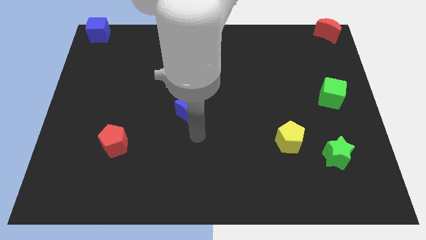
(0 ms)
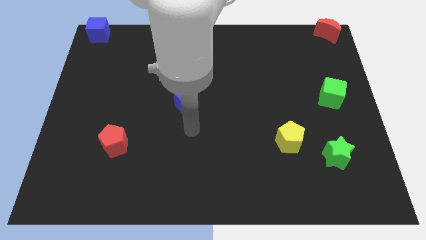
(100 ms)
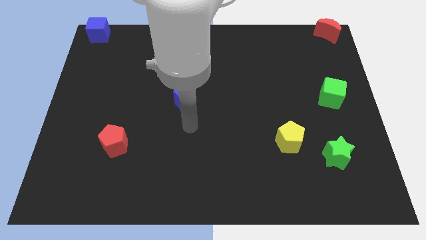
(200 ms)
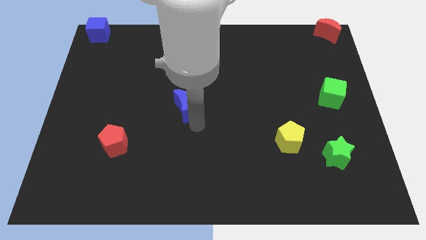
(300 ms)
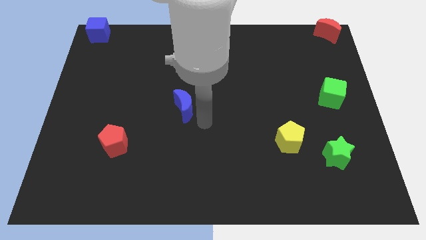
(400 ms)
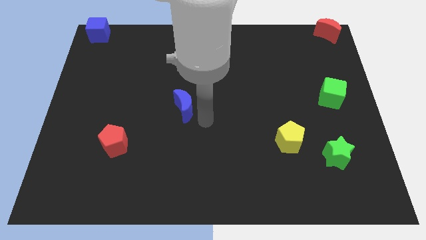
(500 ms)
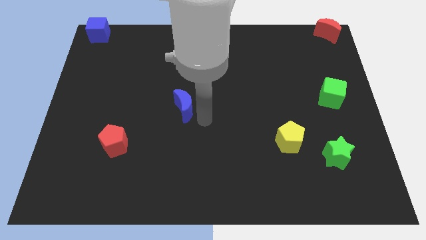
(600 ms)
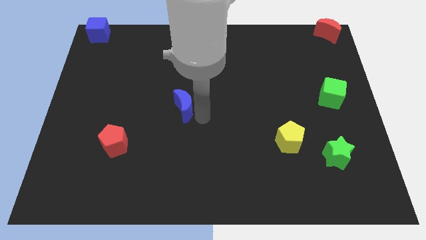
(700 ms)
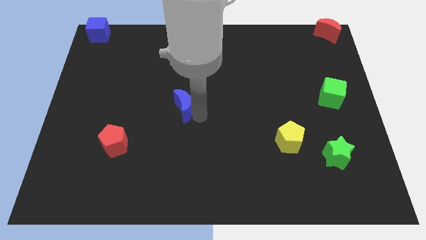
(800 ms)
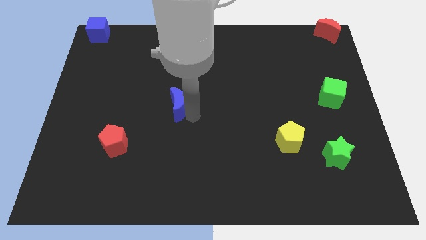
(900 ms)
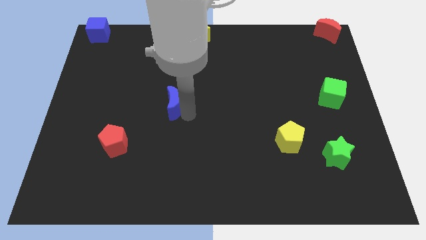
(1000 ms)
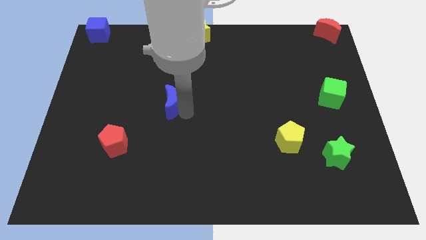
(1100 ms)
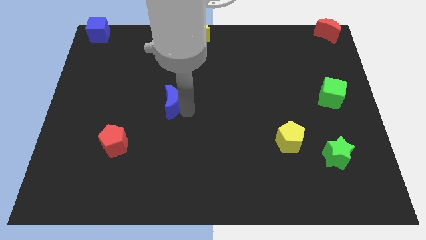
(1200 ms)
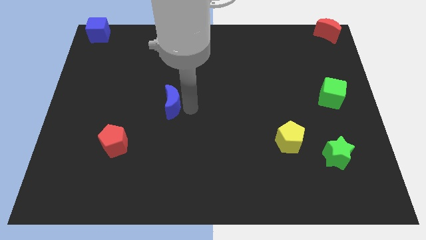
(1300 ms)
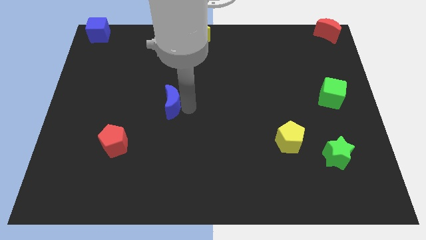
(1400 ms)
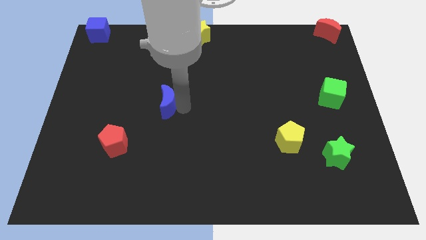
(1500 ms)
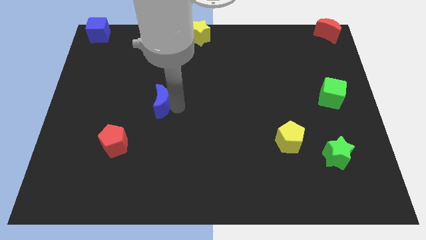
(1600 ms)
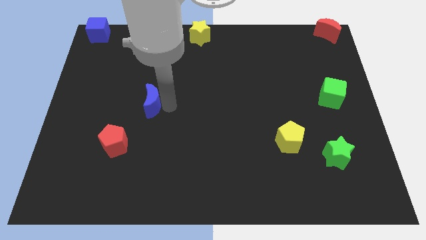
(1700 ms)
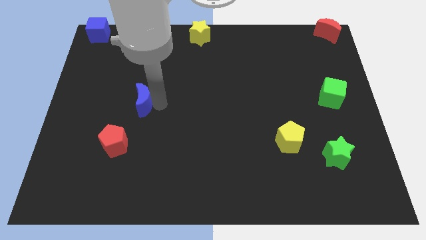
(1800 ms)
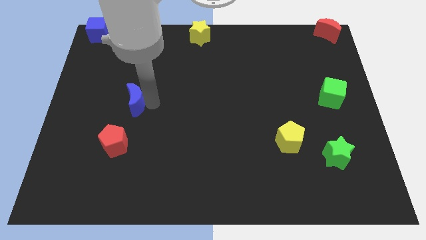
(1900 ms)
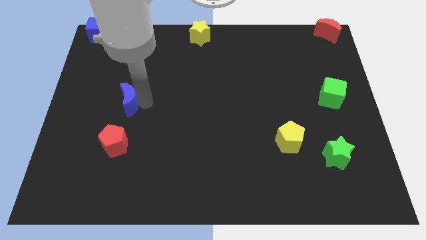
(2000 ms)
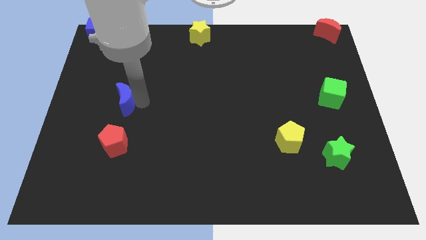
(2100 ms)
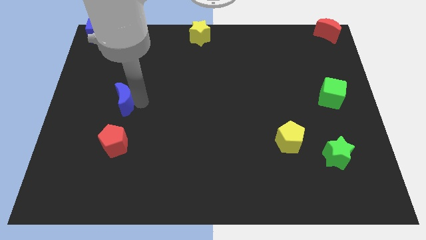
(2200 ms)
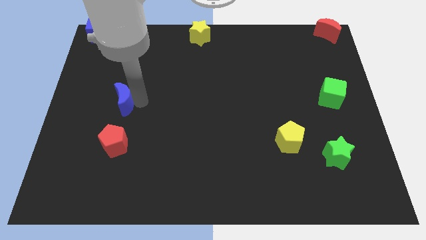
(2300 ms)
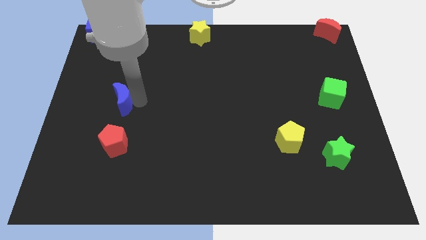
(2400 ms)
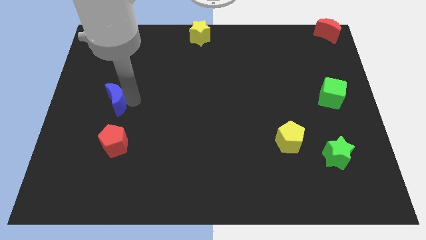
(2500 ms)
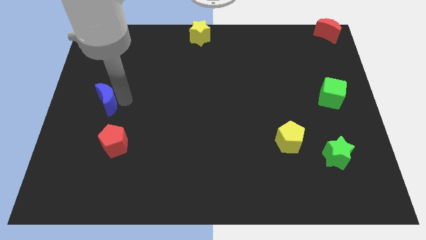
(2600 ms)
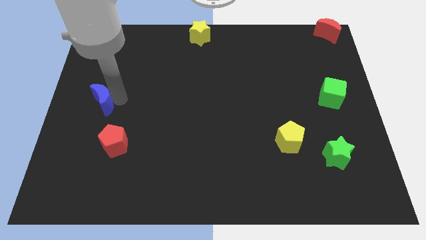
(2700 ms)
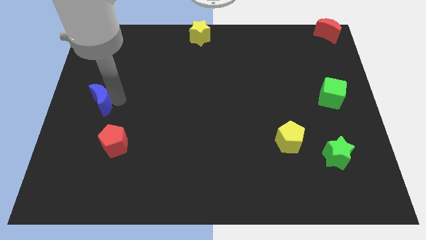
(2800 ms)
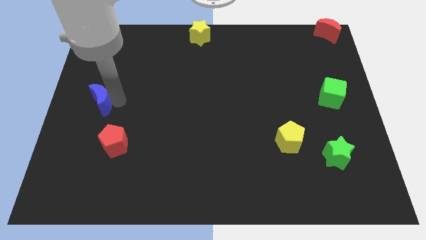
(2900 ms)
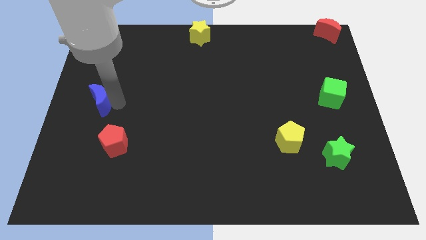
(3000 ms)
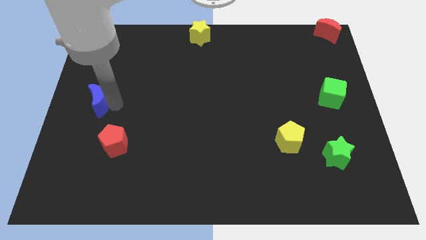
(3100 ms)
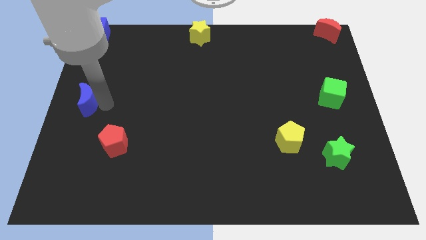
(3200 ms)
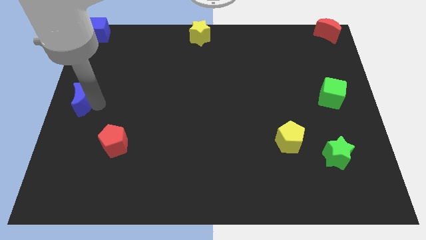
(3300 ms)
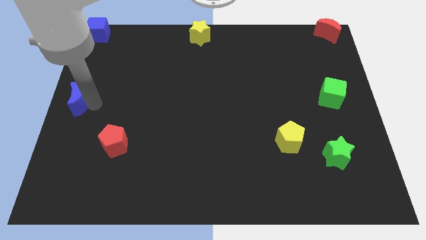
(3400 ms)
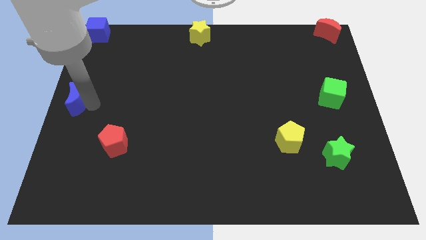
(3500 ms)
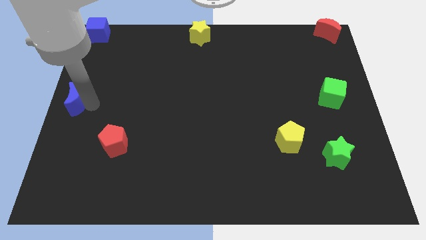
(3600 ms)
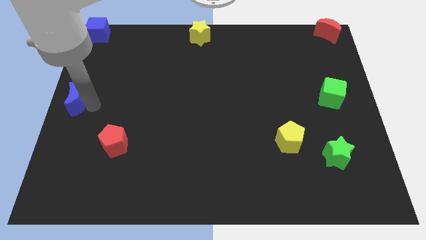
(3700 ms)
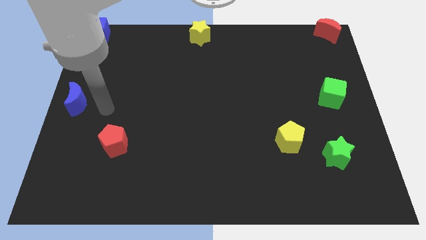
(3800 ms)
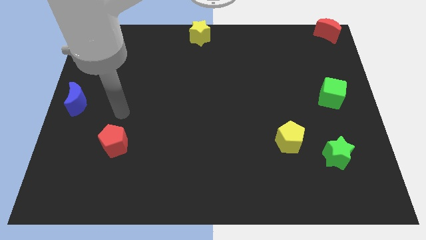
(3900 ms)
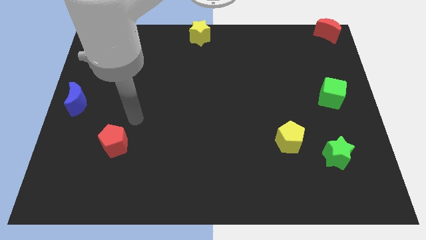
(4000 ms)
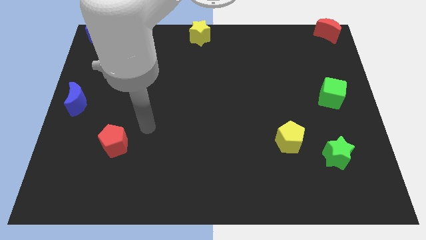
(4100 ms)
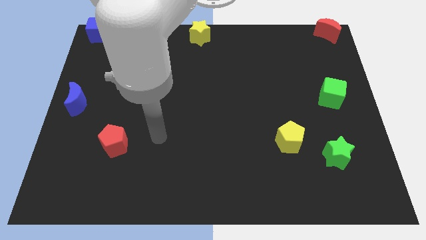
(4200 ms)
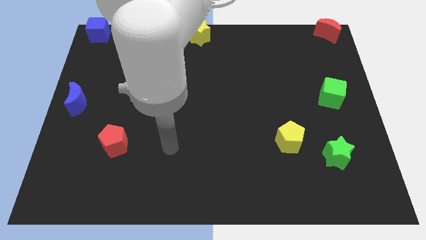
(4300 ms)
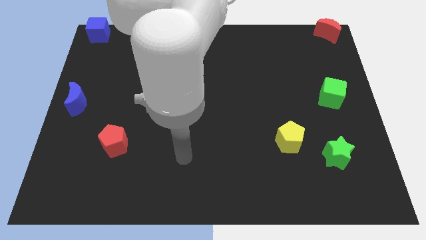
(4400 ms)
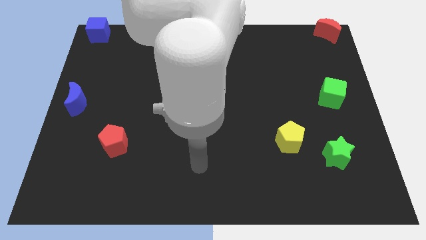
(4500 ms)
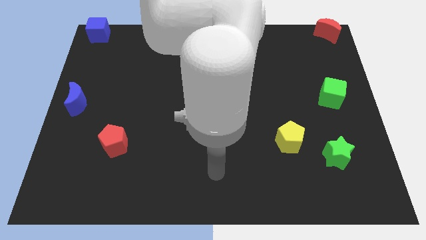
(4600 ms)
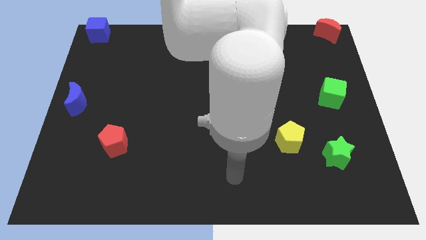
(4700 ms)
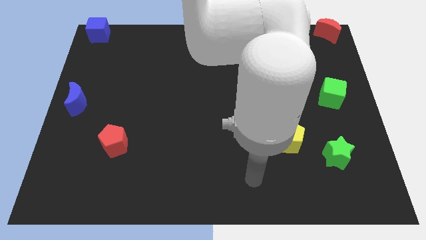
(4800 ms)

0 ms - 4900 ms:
place the blue crescent towards the center left of the board

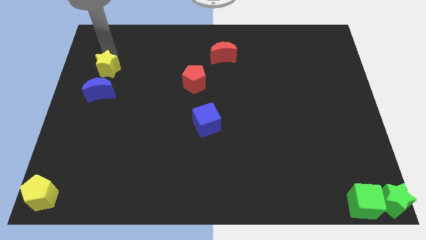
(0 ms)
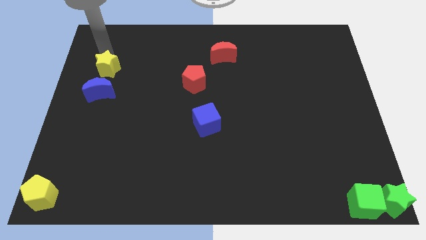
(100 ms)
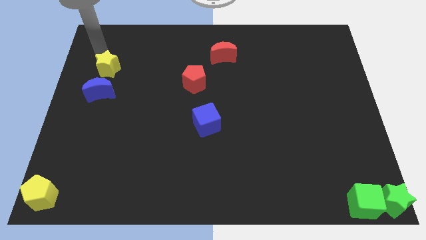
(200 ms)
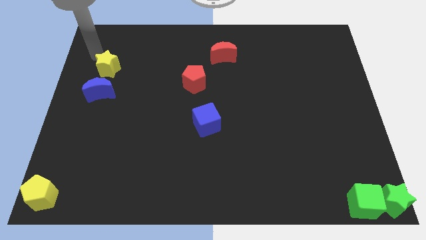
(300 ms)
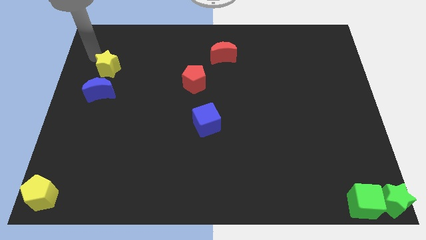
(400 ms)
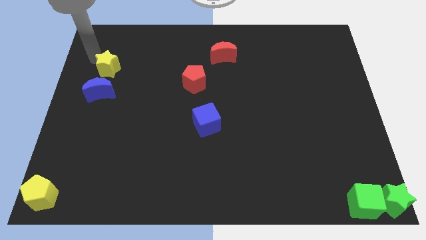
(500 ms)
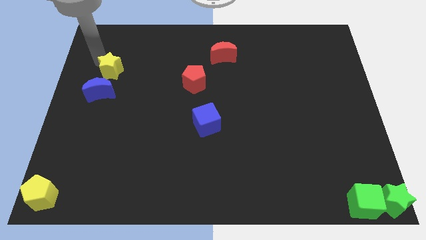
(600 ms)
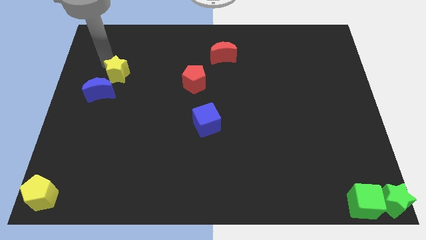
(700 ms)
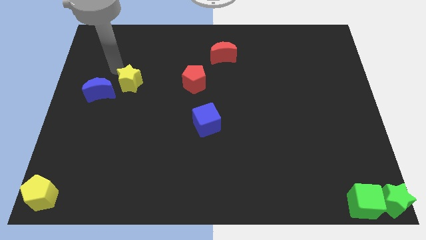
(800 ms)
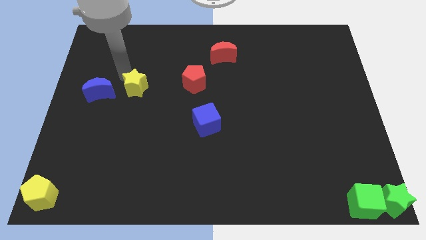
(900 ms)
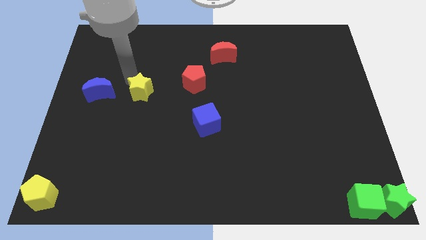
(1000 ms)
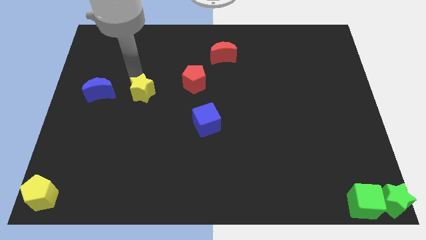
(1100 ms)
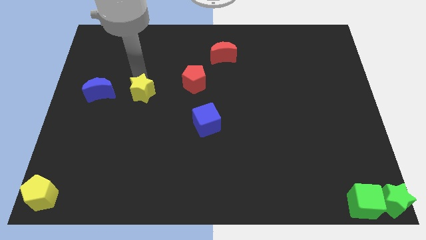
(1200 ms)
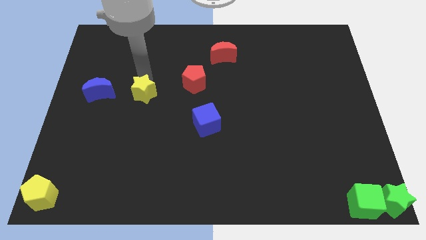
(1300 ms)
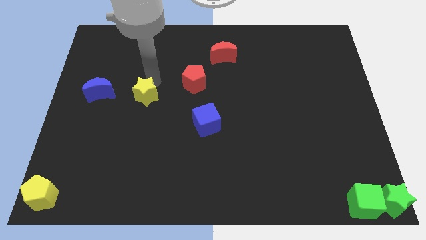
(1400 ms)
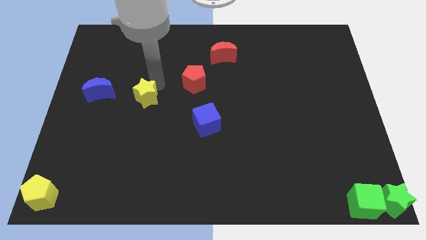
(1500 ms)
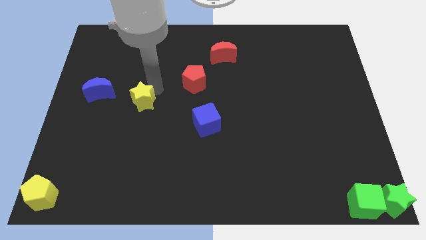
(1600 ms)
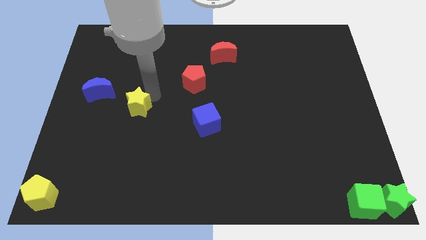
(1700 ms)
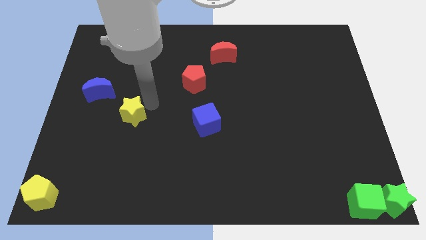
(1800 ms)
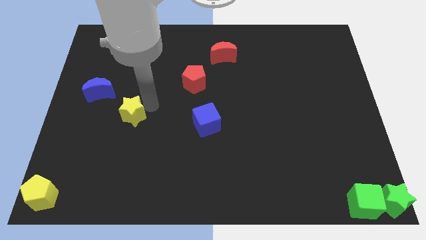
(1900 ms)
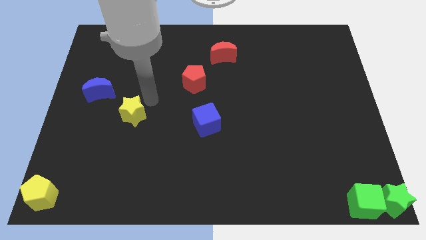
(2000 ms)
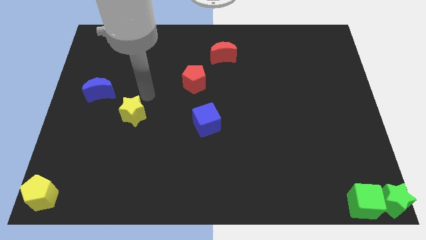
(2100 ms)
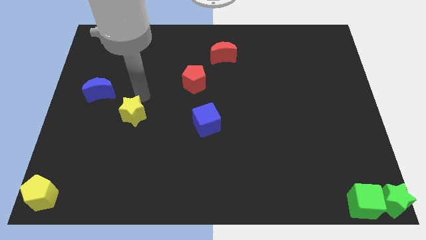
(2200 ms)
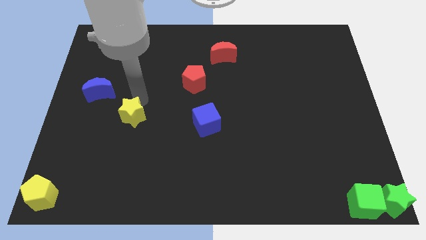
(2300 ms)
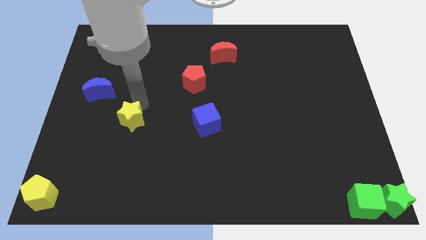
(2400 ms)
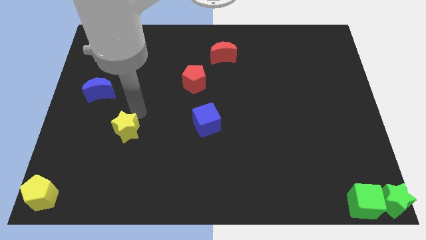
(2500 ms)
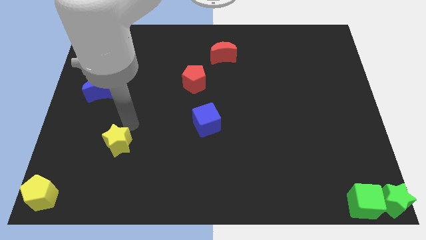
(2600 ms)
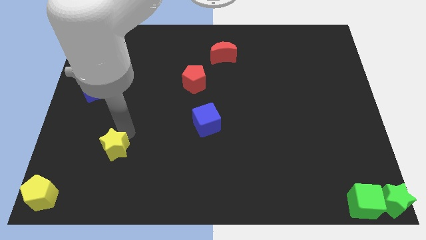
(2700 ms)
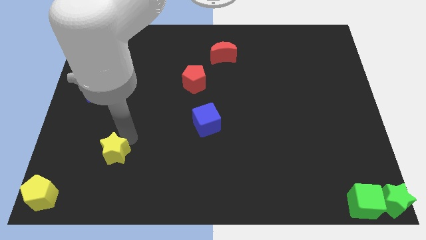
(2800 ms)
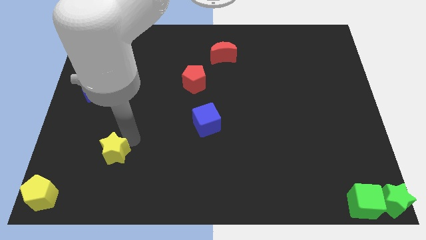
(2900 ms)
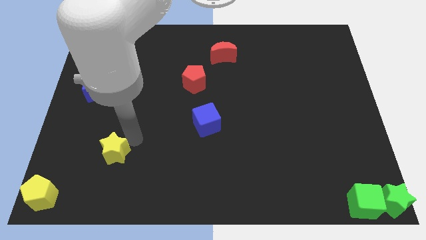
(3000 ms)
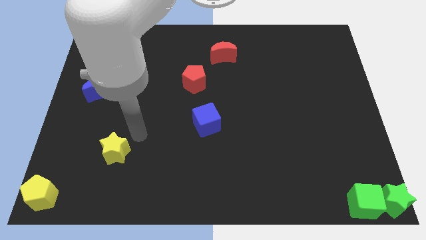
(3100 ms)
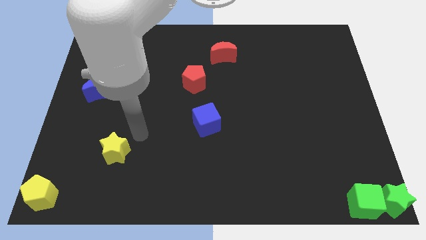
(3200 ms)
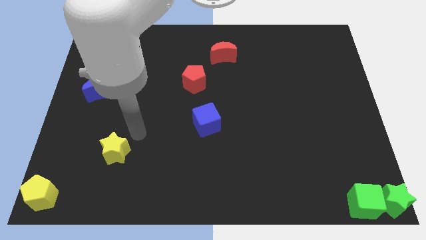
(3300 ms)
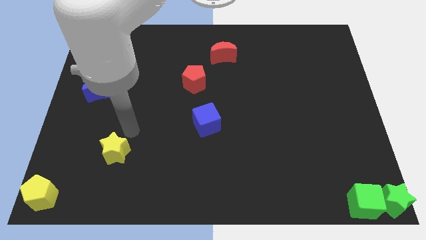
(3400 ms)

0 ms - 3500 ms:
move the yellow star parallel right to the yellow pentagon

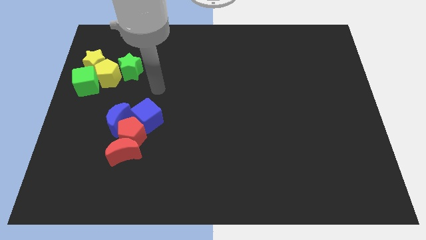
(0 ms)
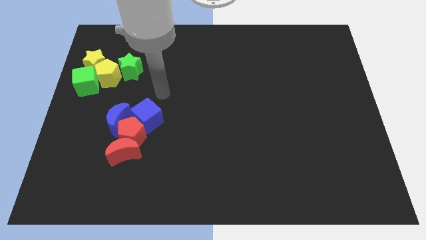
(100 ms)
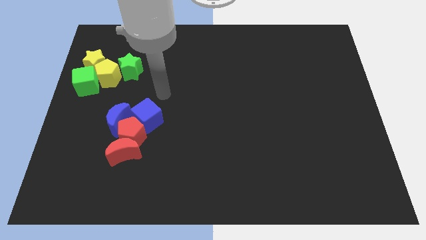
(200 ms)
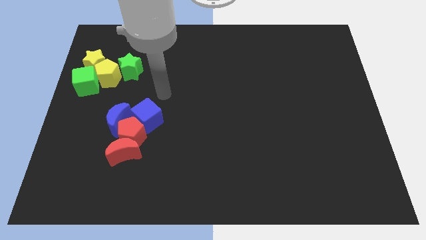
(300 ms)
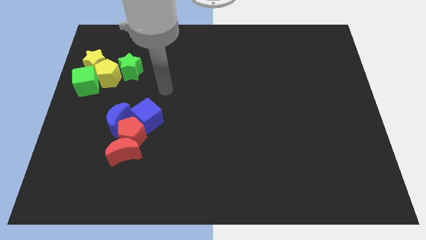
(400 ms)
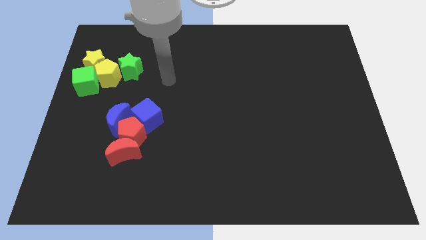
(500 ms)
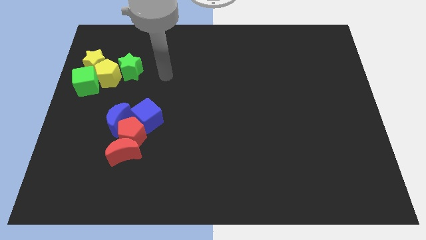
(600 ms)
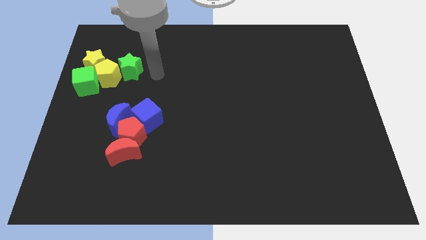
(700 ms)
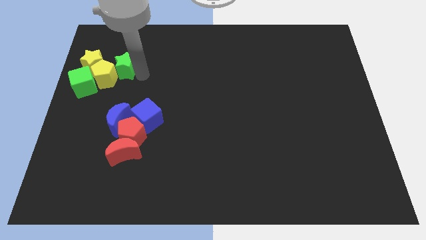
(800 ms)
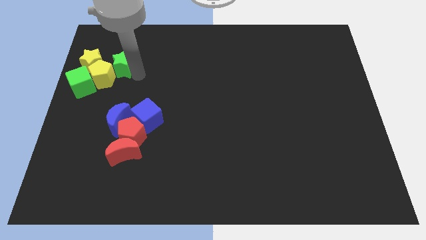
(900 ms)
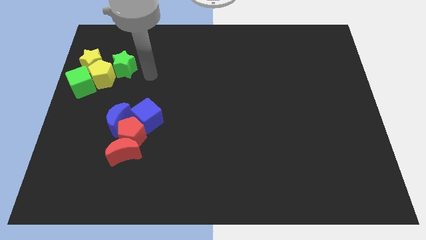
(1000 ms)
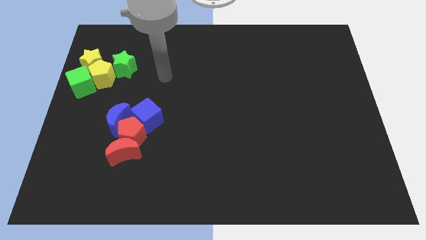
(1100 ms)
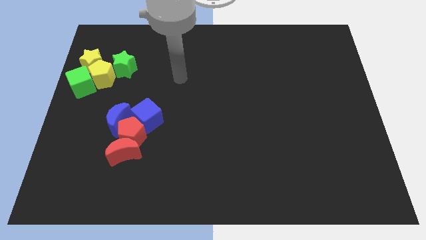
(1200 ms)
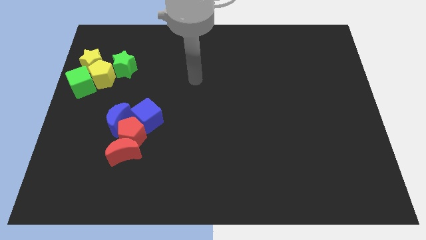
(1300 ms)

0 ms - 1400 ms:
push green star slightly towards left
